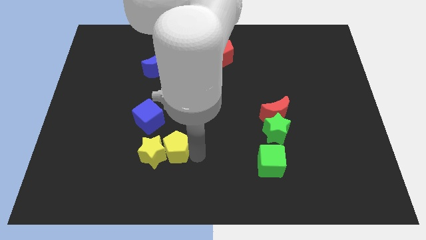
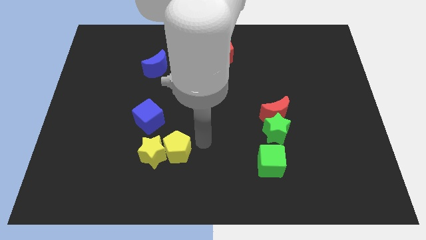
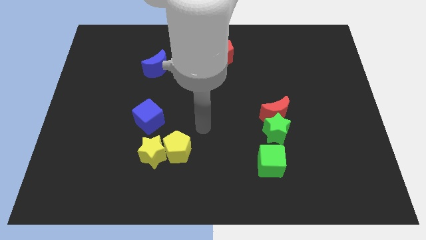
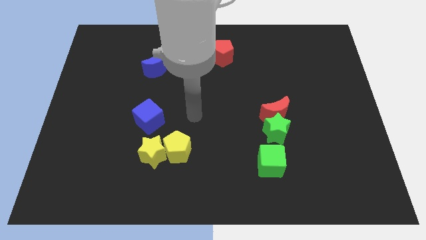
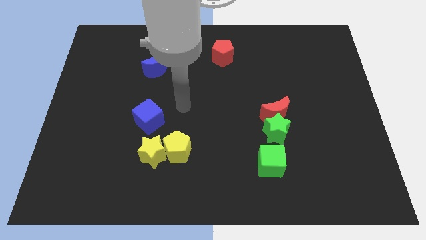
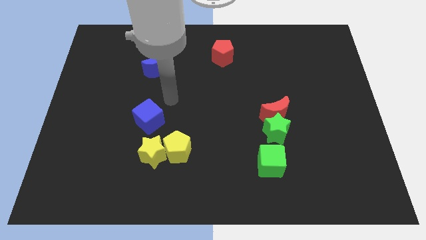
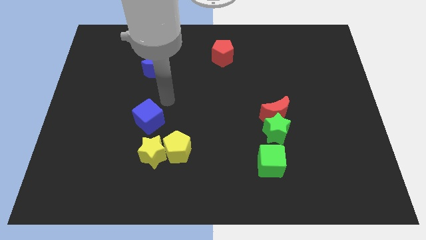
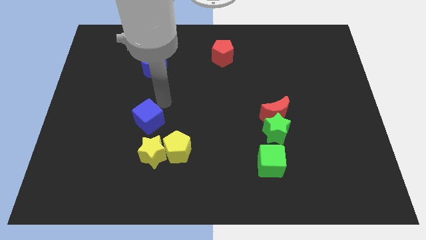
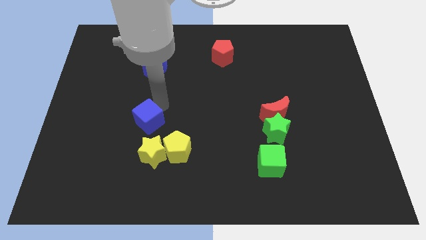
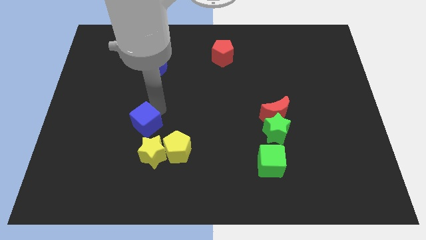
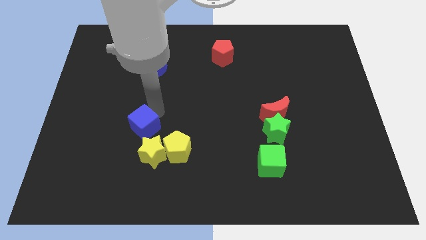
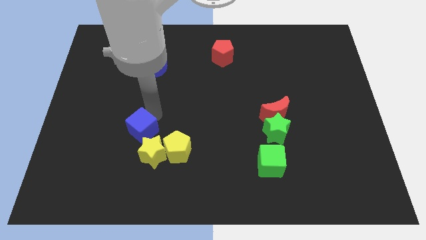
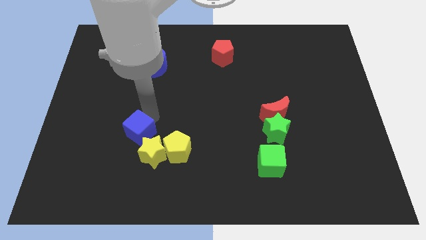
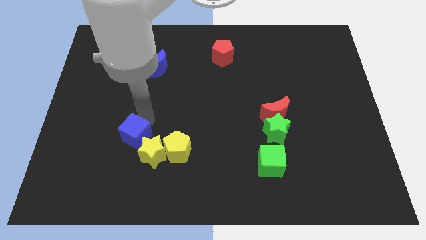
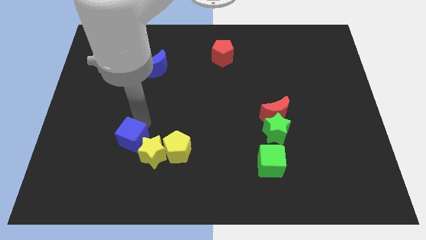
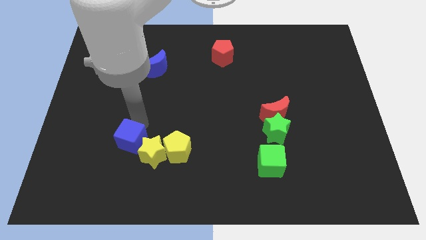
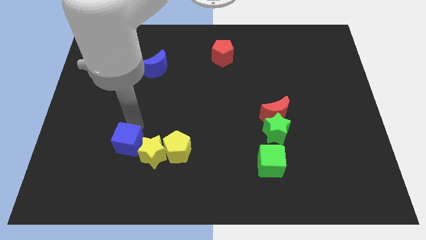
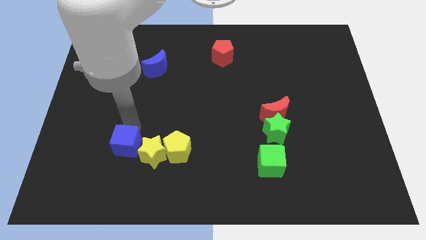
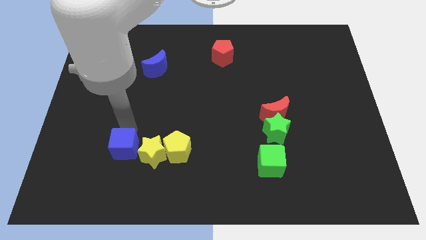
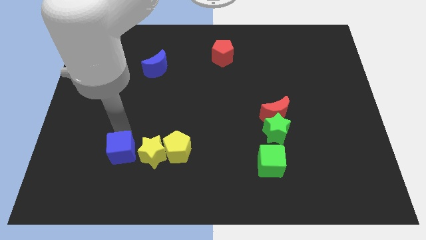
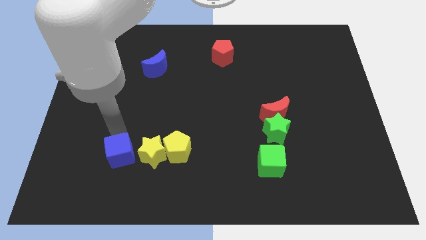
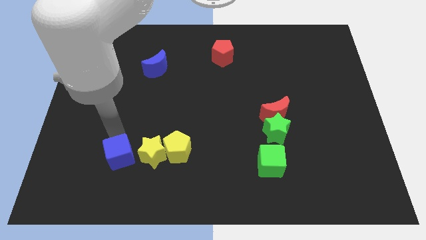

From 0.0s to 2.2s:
move the blue cube to the left of the yellow star

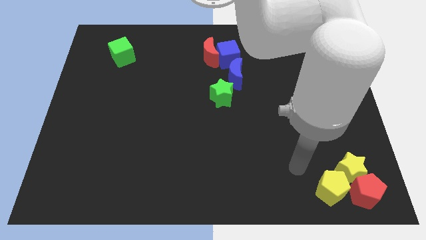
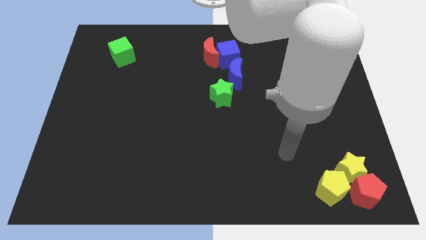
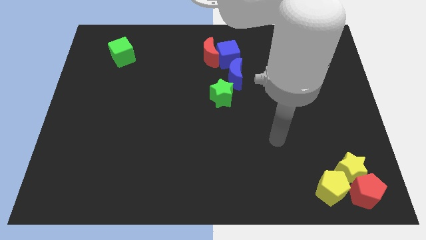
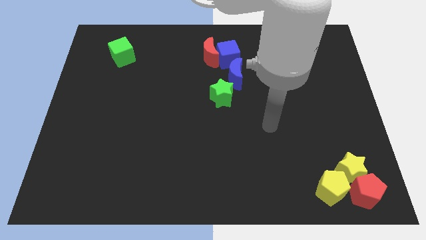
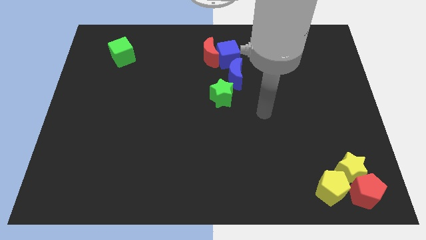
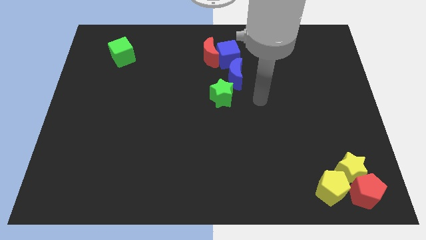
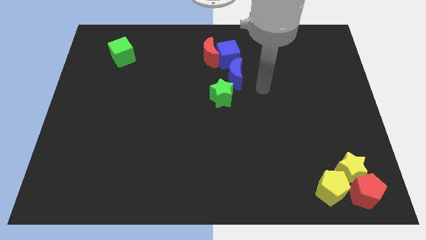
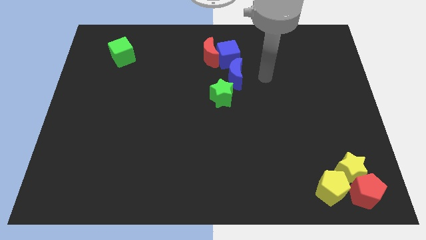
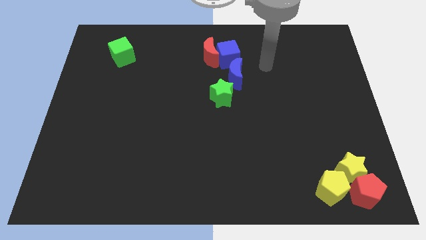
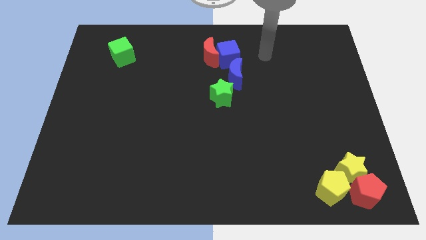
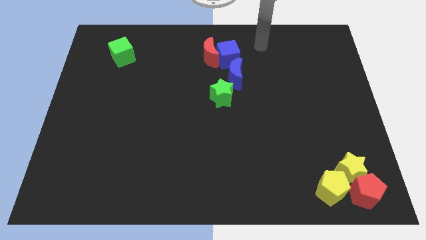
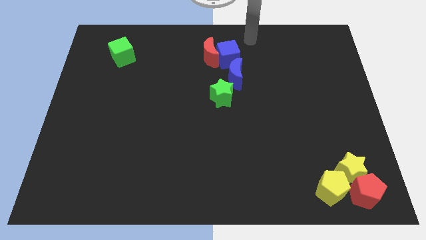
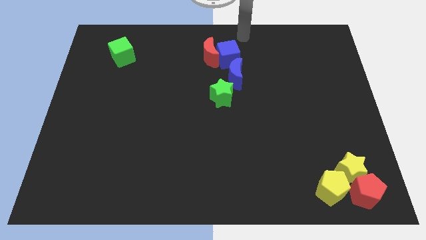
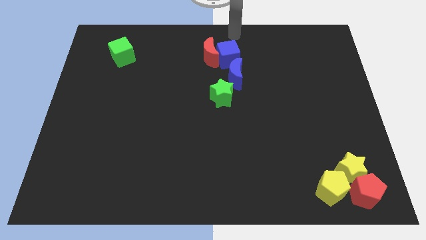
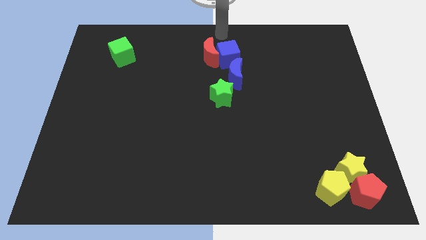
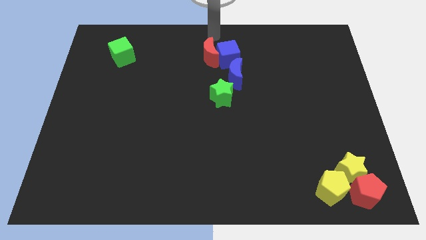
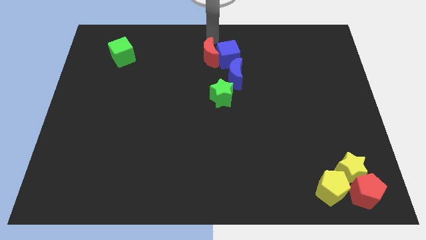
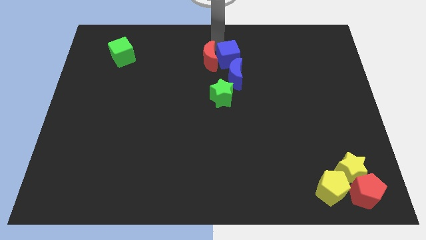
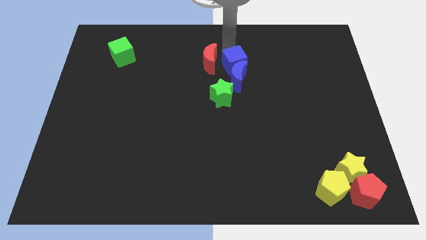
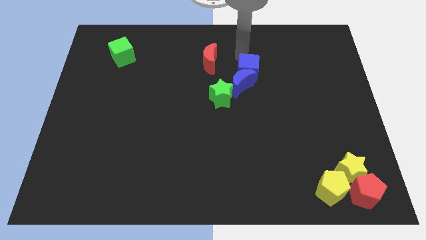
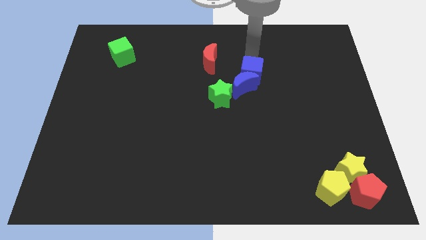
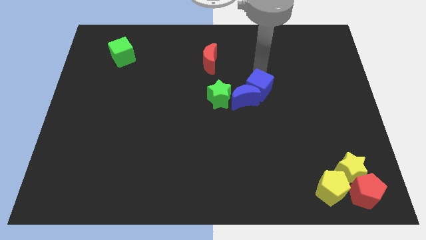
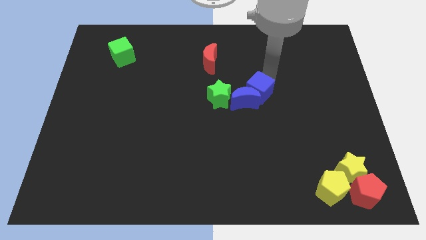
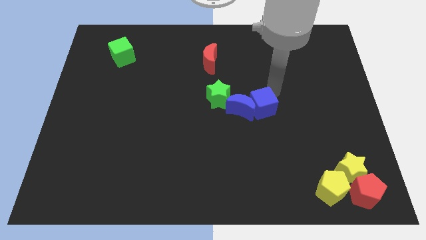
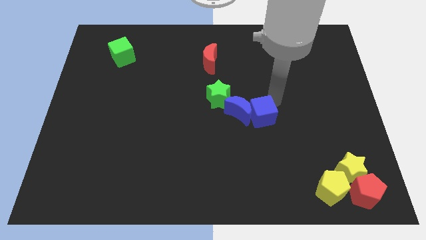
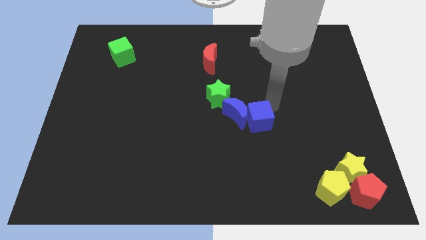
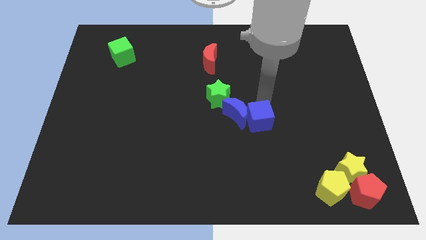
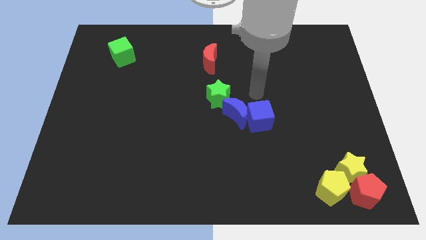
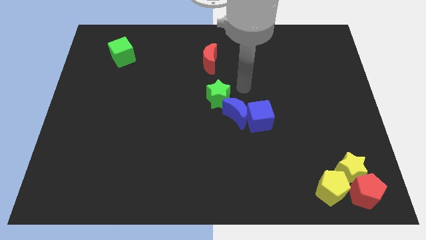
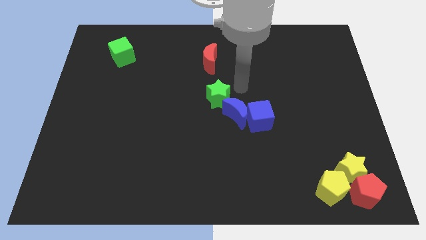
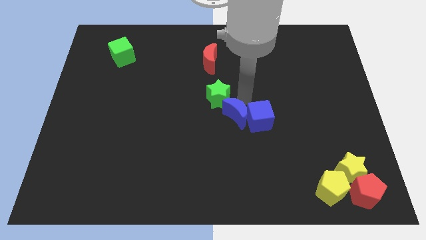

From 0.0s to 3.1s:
push the blue blocks at the bottom right of the green star

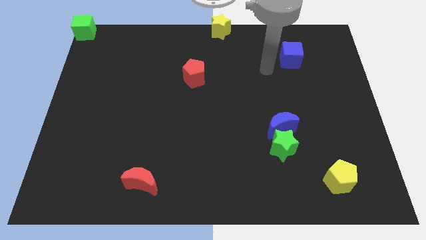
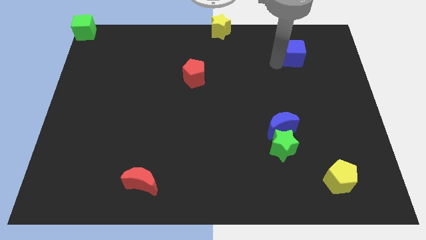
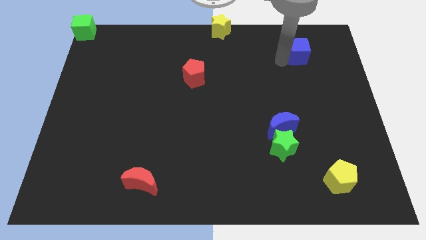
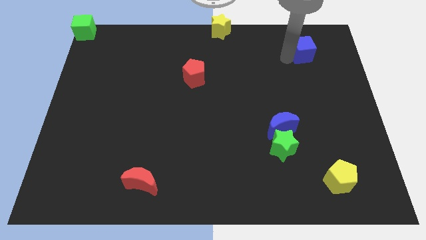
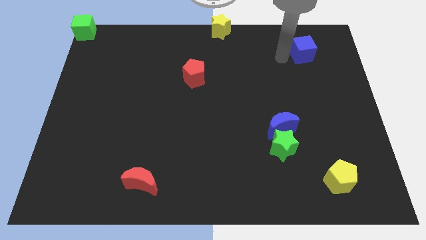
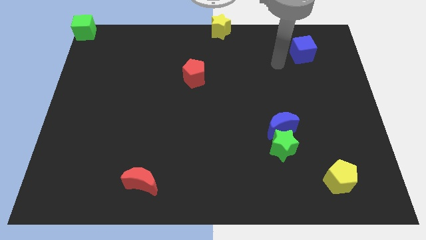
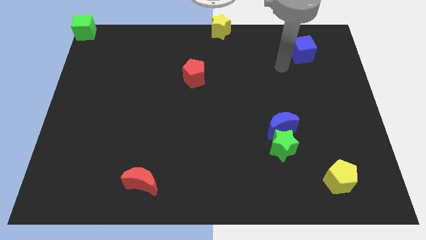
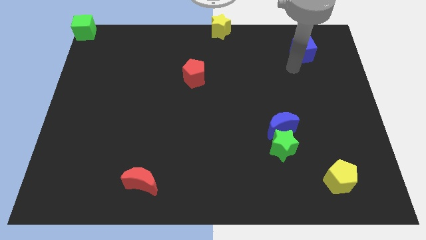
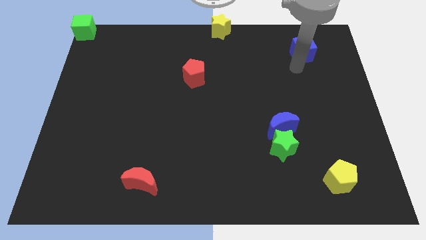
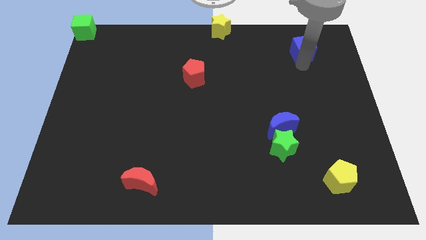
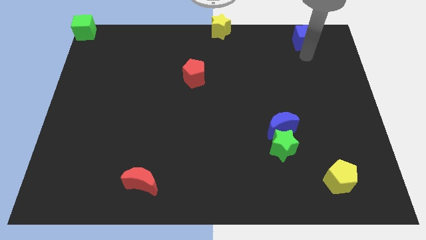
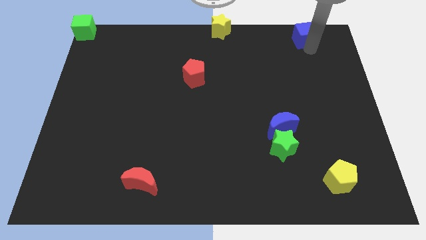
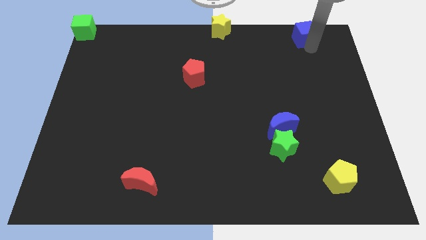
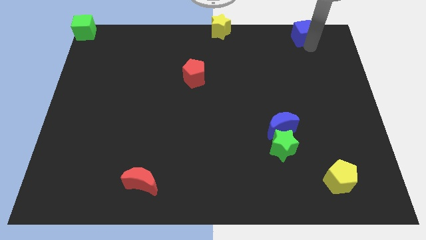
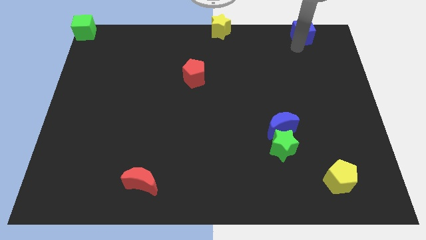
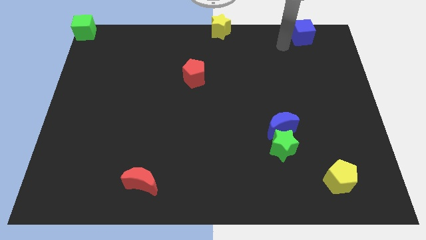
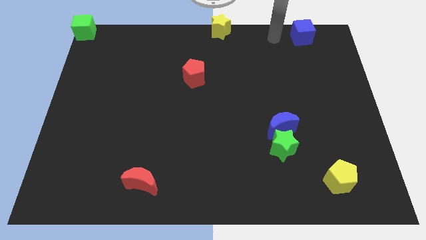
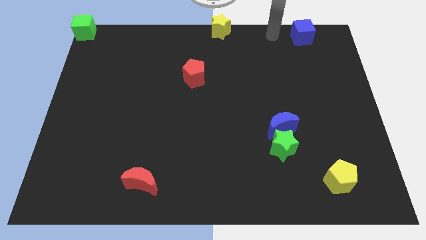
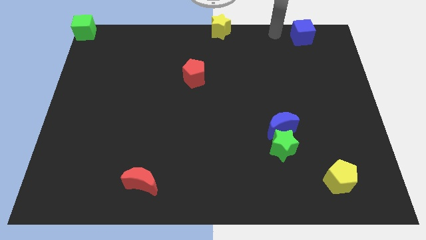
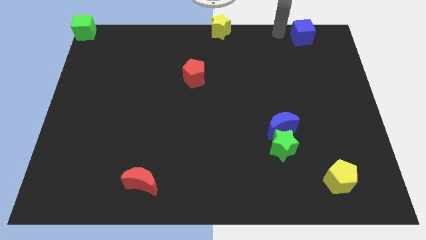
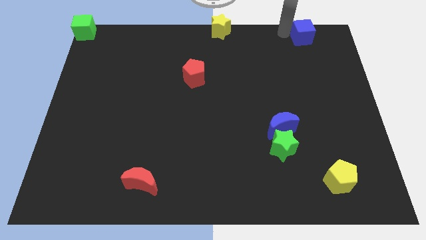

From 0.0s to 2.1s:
put the blue cube to the right of the yellow star

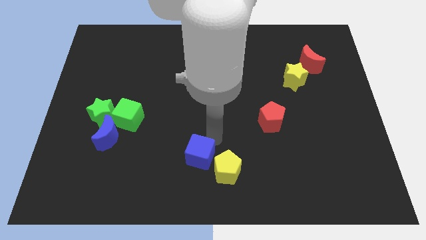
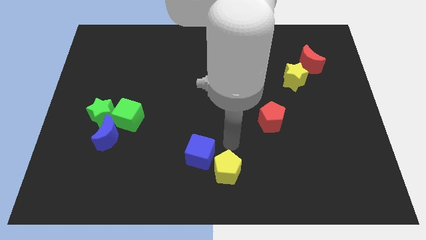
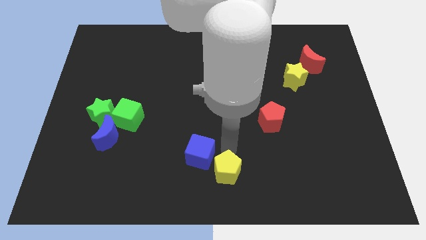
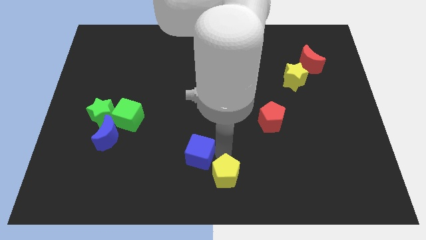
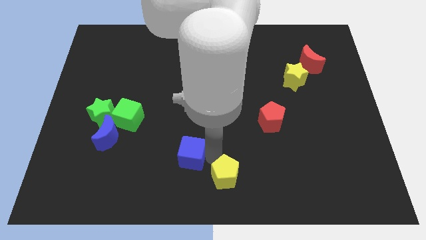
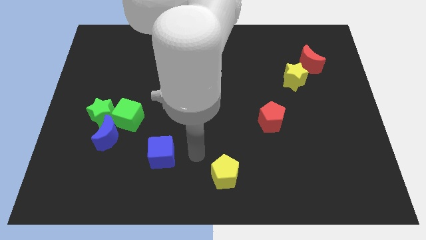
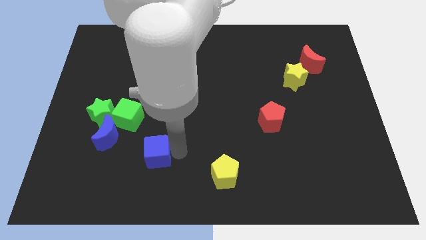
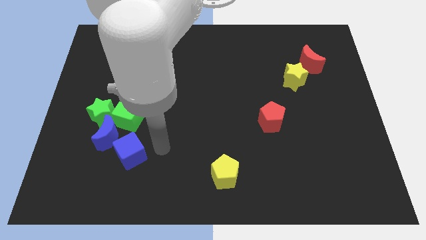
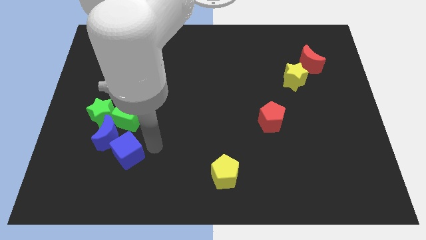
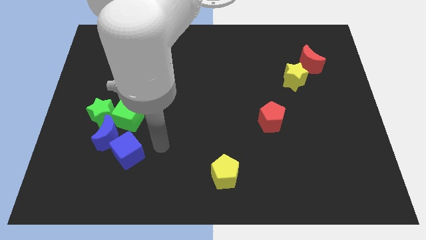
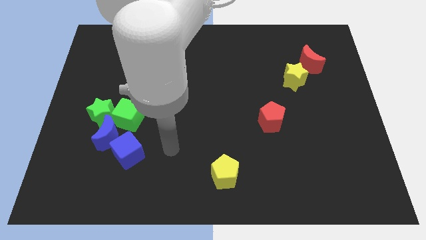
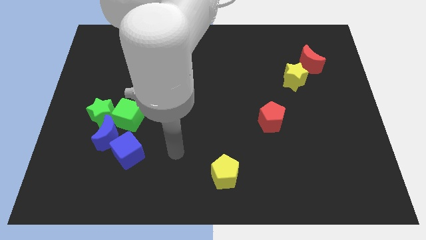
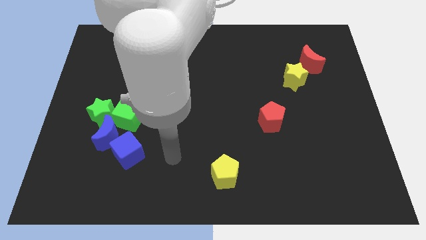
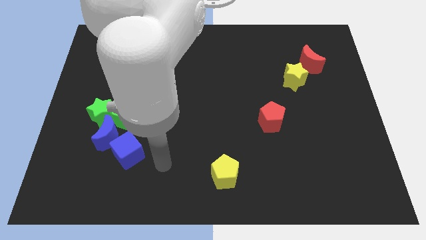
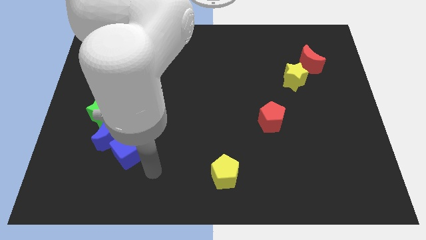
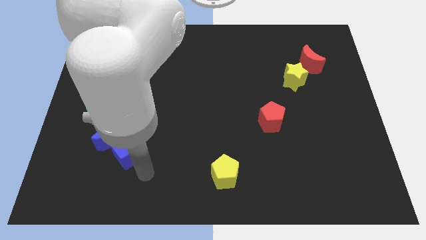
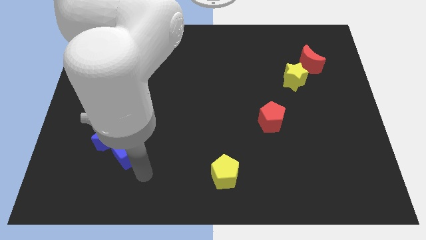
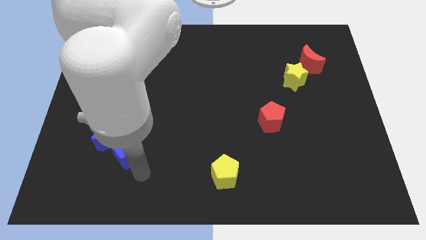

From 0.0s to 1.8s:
push the blue cube into the blue crescent
